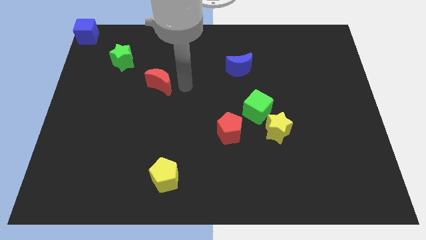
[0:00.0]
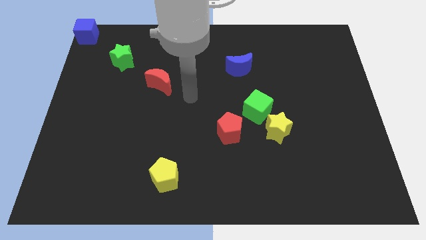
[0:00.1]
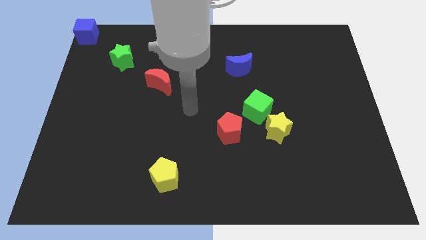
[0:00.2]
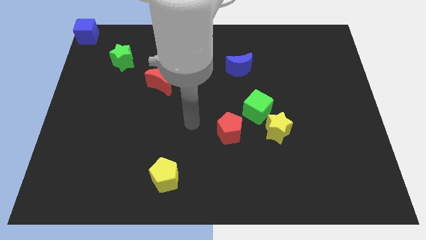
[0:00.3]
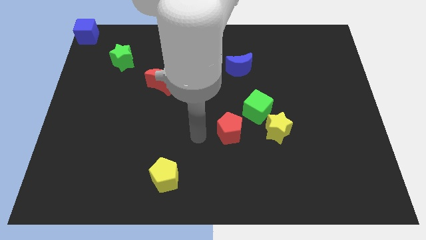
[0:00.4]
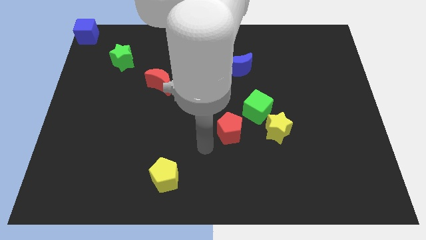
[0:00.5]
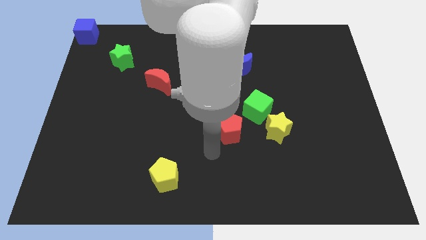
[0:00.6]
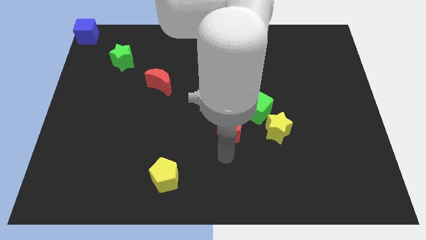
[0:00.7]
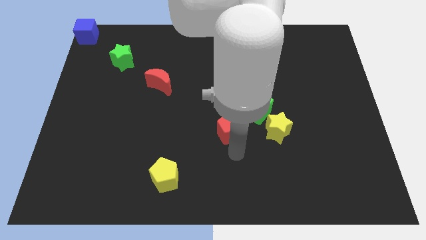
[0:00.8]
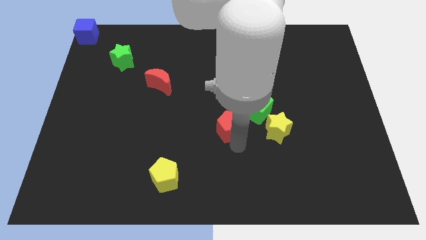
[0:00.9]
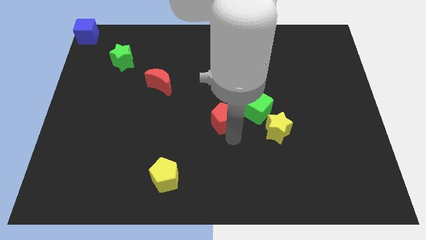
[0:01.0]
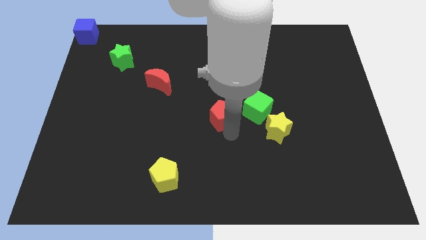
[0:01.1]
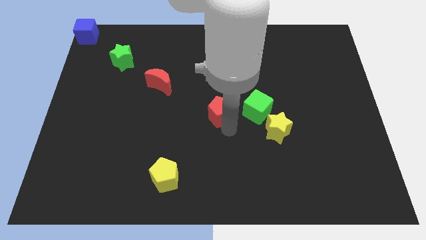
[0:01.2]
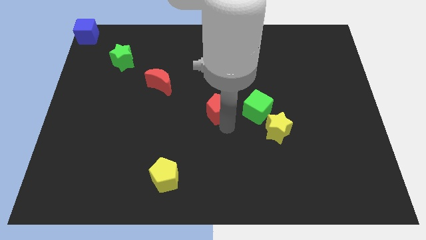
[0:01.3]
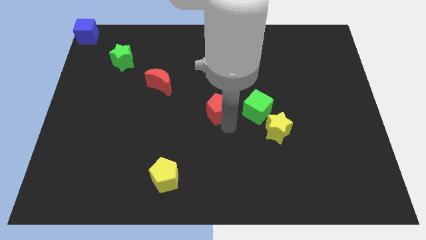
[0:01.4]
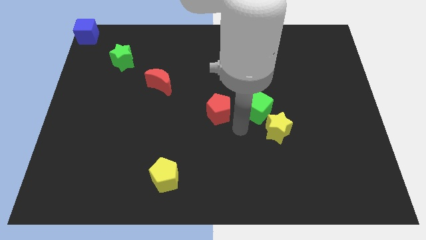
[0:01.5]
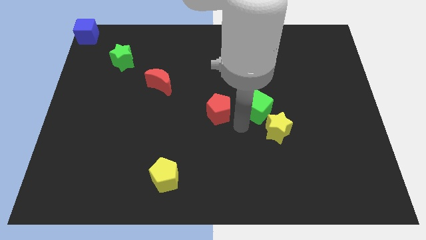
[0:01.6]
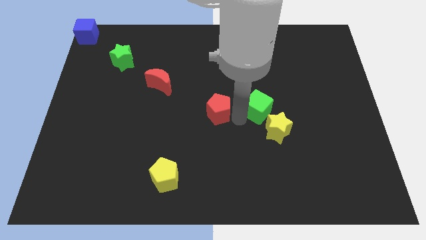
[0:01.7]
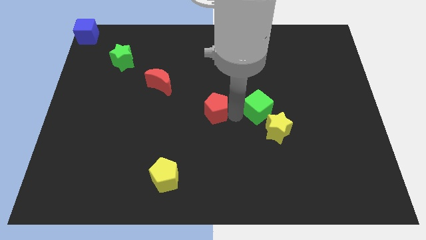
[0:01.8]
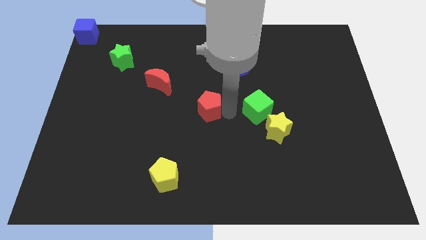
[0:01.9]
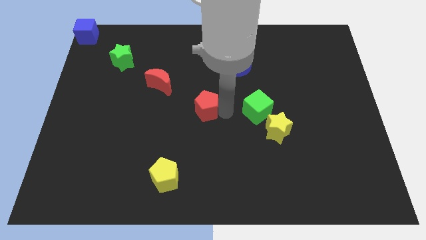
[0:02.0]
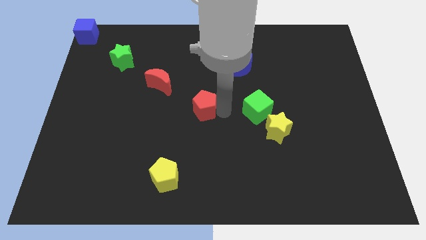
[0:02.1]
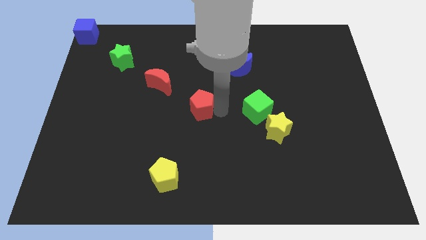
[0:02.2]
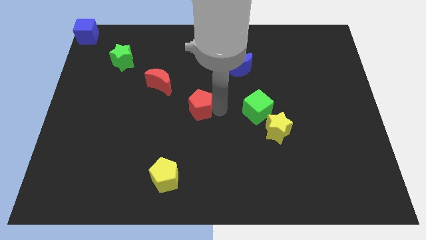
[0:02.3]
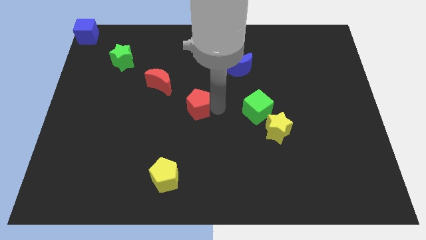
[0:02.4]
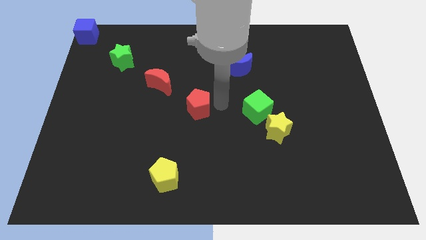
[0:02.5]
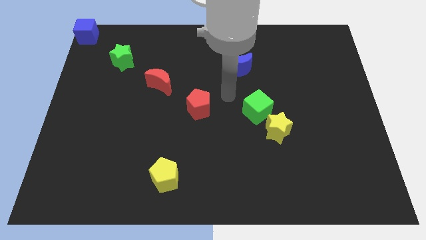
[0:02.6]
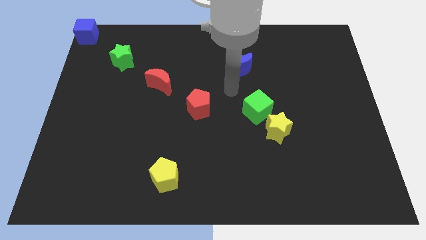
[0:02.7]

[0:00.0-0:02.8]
move the red pentagon to the bottom right of the red crescent

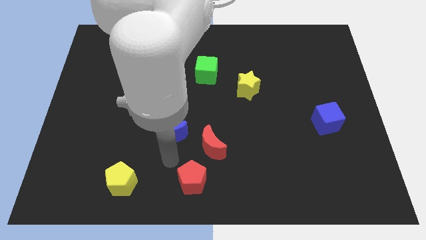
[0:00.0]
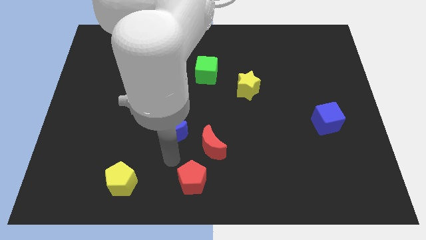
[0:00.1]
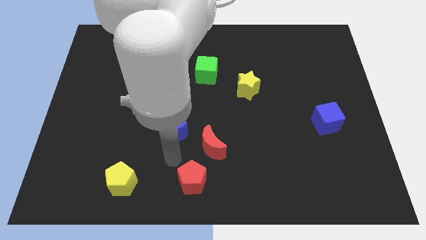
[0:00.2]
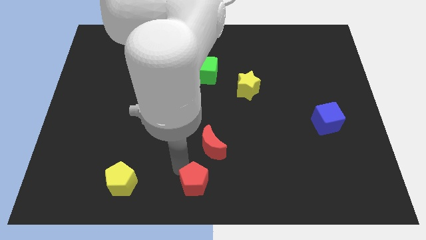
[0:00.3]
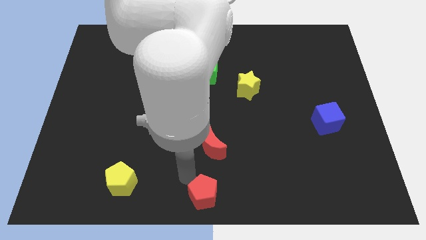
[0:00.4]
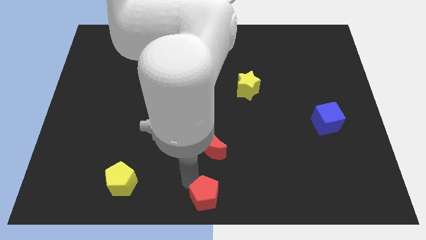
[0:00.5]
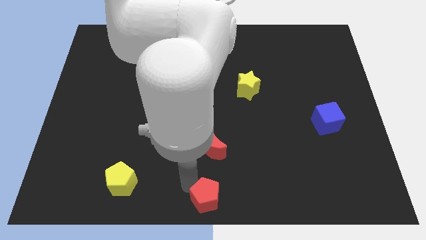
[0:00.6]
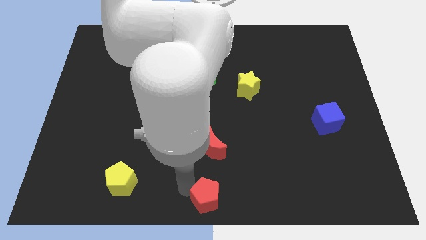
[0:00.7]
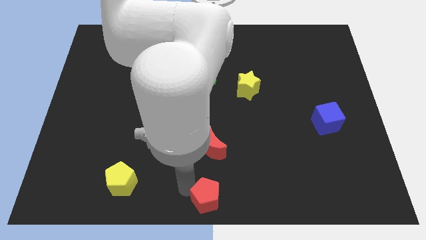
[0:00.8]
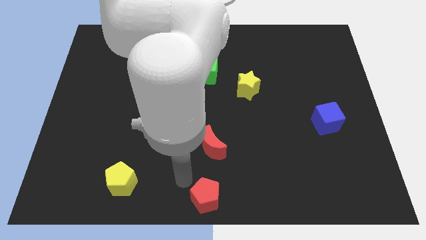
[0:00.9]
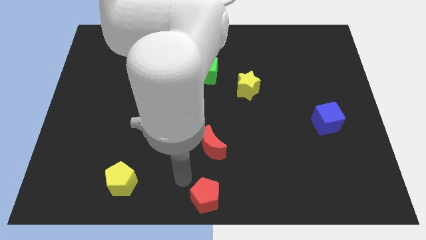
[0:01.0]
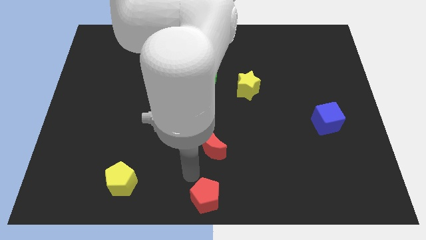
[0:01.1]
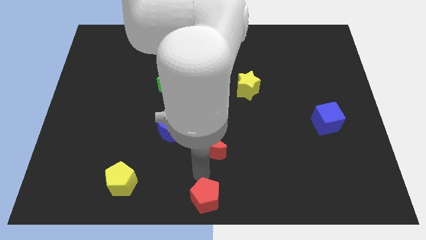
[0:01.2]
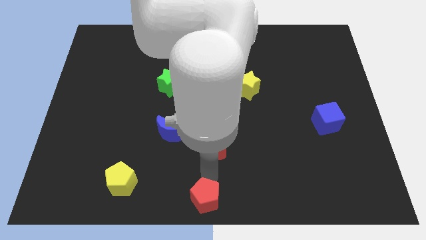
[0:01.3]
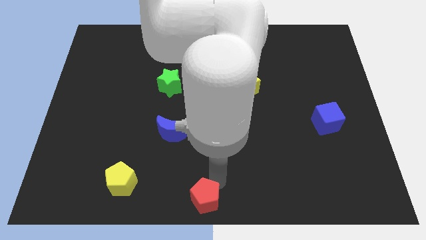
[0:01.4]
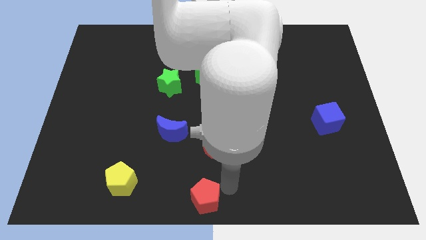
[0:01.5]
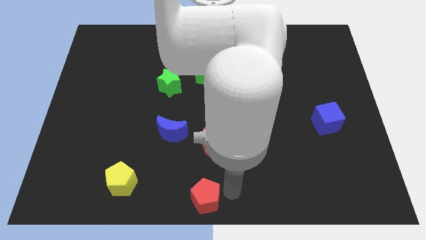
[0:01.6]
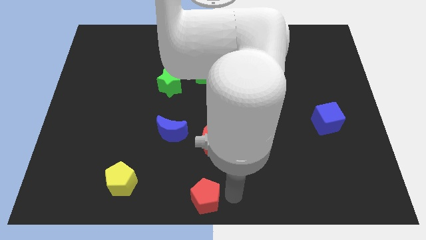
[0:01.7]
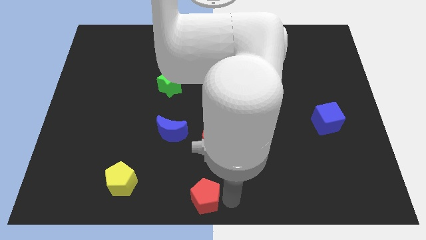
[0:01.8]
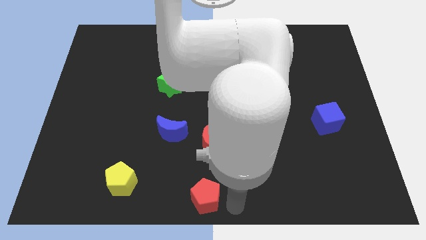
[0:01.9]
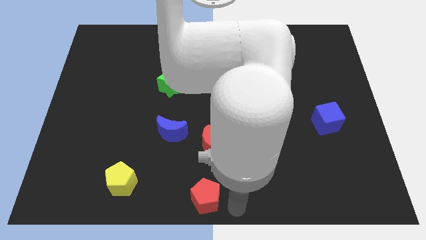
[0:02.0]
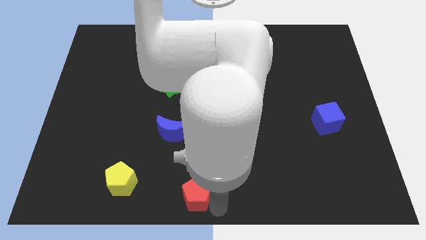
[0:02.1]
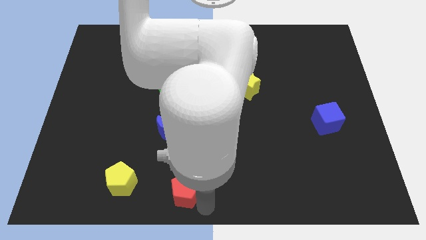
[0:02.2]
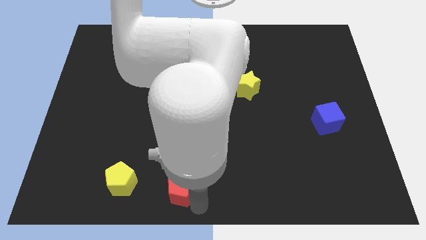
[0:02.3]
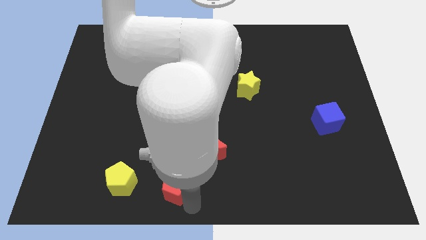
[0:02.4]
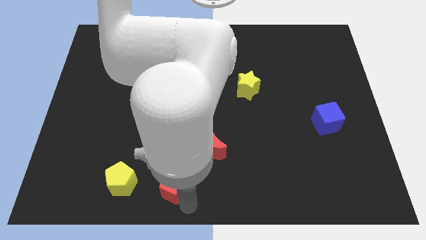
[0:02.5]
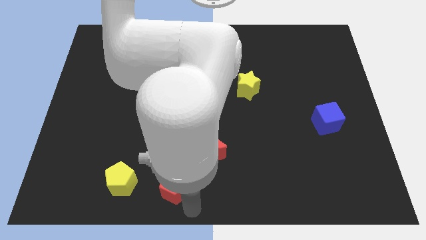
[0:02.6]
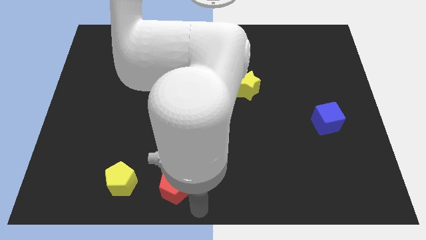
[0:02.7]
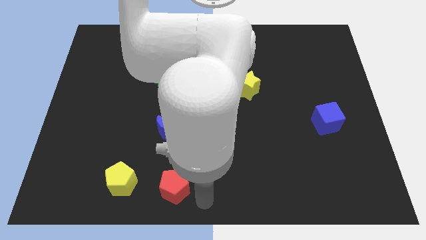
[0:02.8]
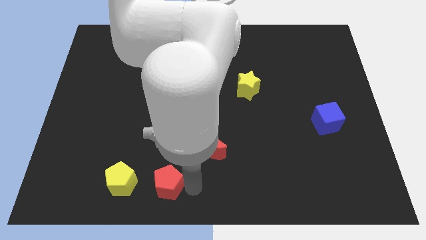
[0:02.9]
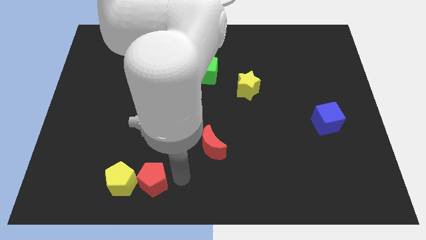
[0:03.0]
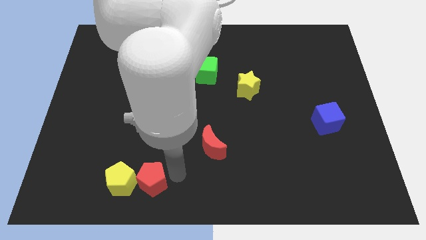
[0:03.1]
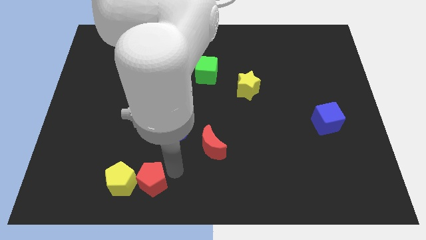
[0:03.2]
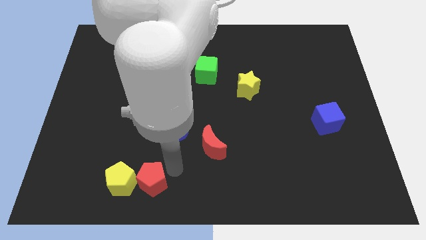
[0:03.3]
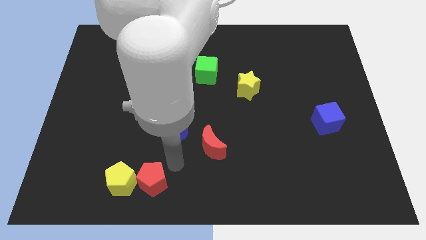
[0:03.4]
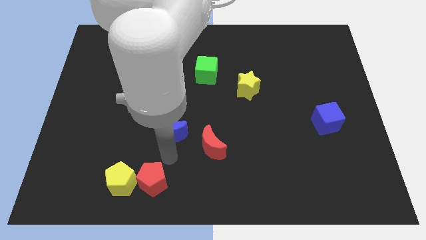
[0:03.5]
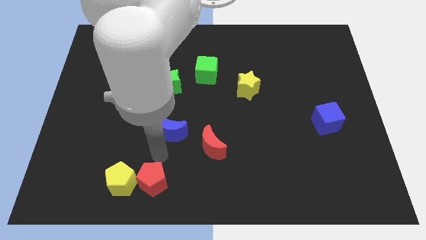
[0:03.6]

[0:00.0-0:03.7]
put the red pentagon to the right side of yellow pentagon

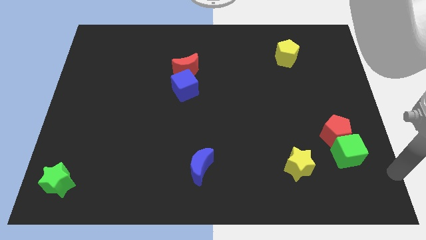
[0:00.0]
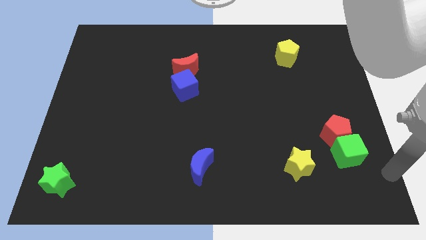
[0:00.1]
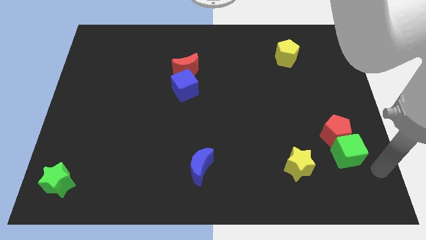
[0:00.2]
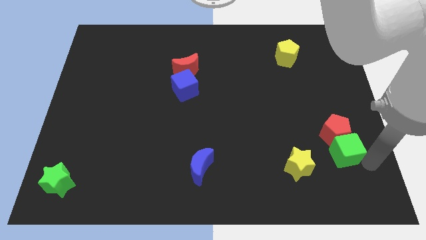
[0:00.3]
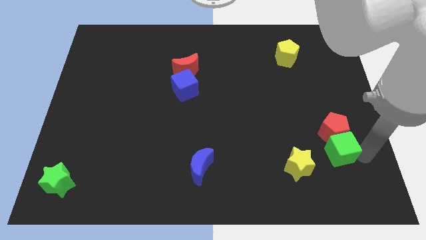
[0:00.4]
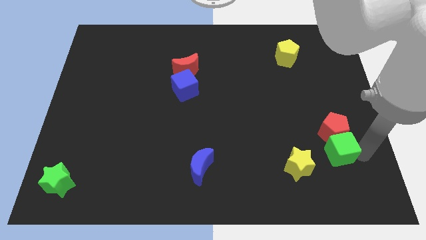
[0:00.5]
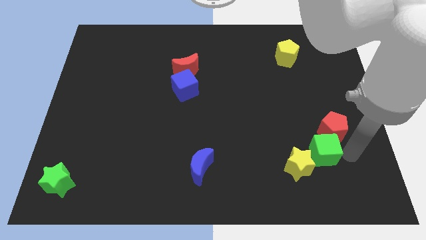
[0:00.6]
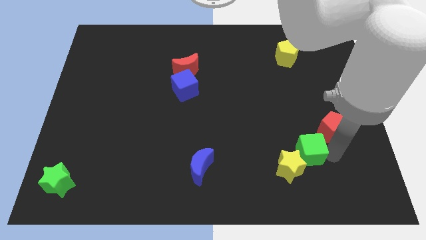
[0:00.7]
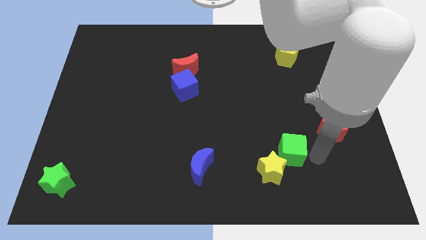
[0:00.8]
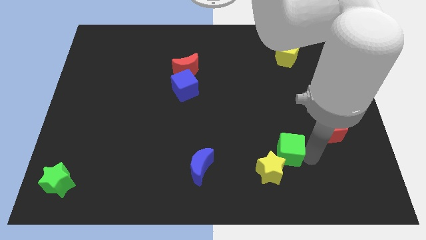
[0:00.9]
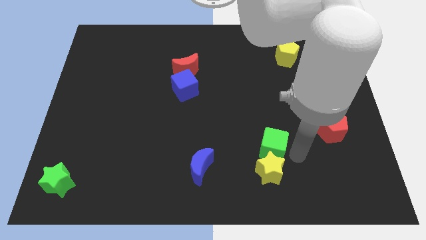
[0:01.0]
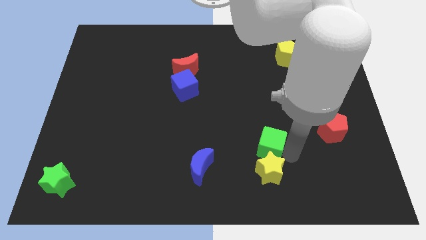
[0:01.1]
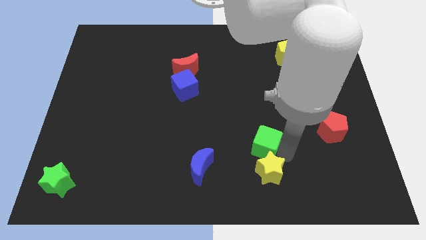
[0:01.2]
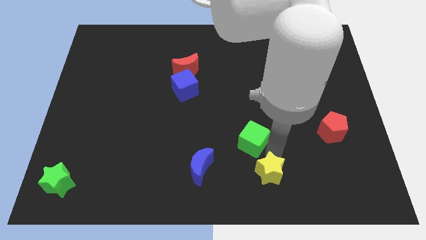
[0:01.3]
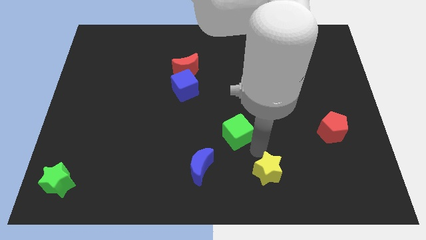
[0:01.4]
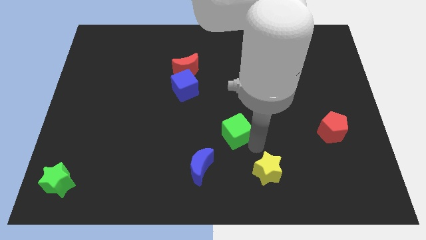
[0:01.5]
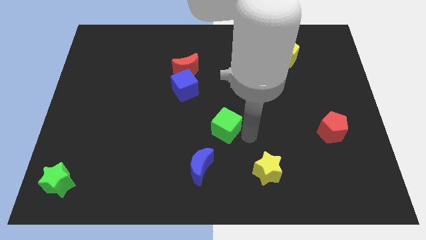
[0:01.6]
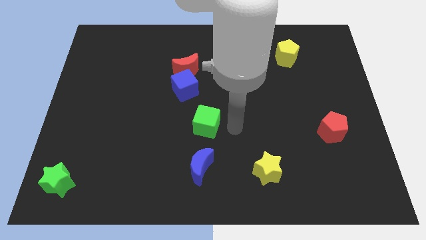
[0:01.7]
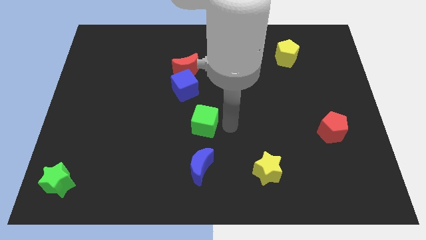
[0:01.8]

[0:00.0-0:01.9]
place the green cube above the blue moon

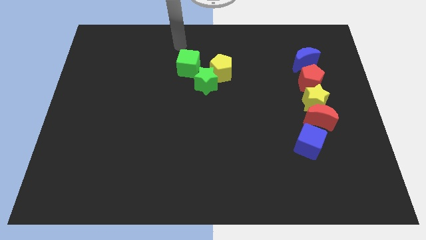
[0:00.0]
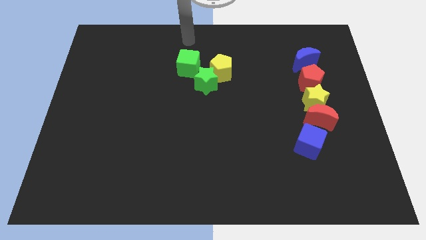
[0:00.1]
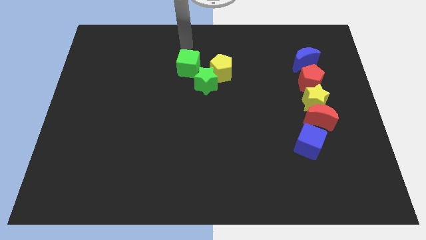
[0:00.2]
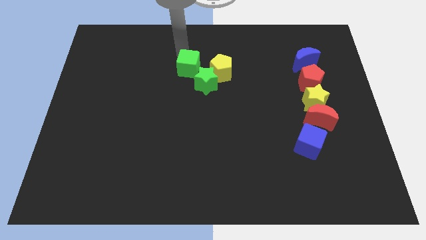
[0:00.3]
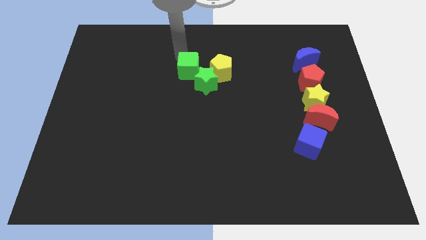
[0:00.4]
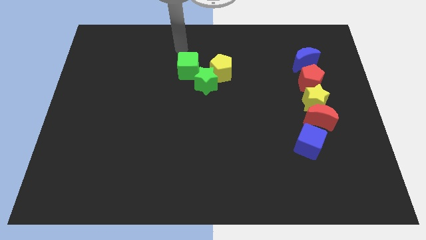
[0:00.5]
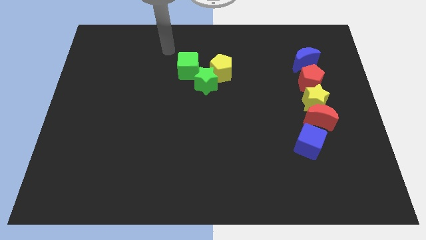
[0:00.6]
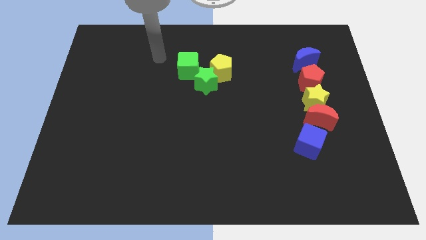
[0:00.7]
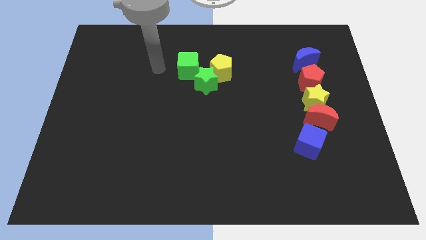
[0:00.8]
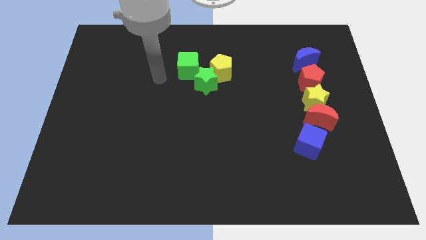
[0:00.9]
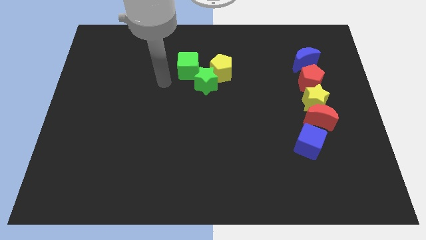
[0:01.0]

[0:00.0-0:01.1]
slide green cube slightly down
